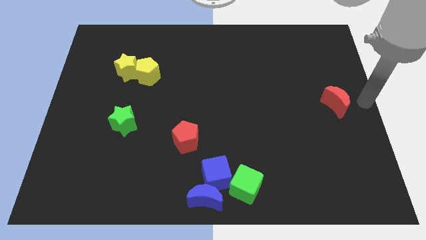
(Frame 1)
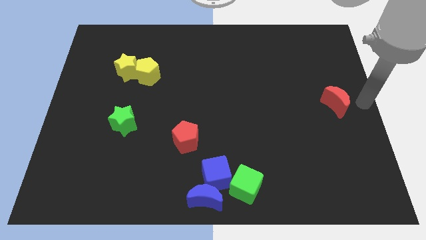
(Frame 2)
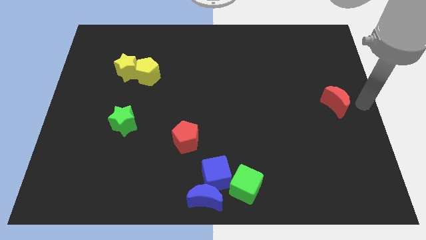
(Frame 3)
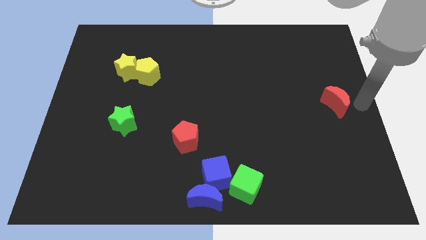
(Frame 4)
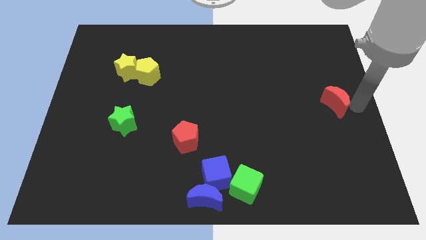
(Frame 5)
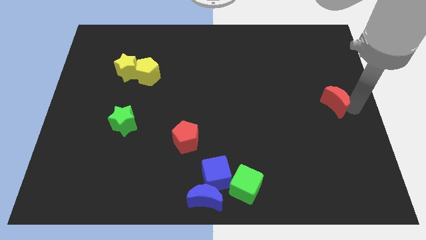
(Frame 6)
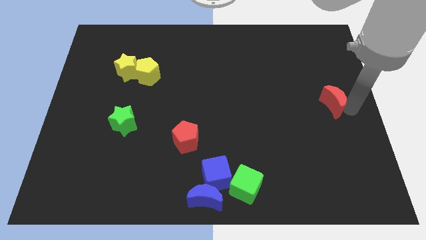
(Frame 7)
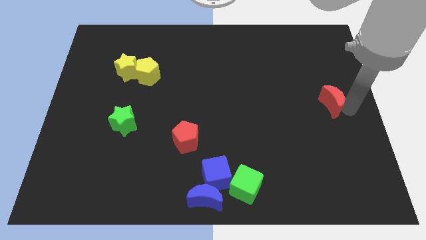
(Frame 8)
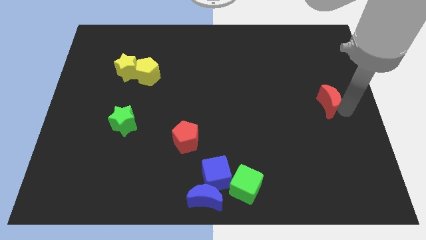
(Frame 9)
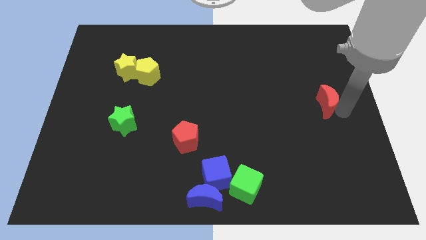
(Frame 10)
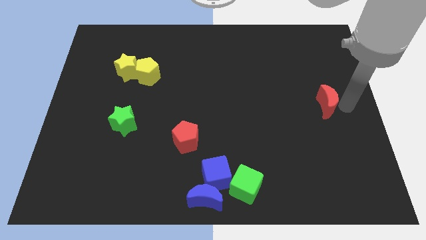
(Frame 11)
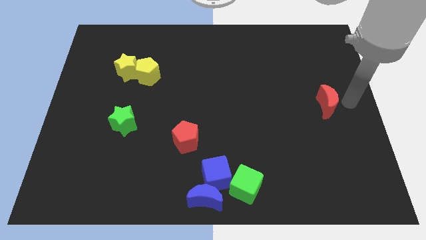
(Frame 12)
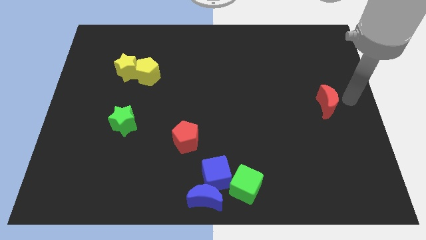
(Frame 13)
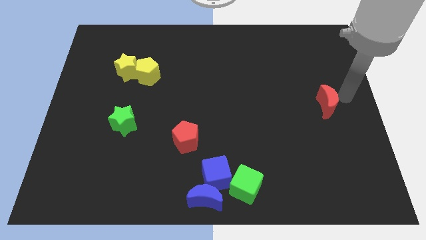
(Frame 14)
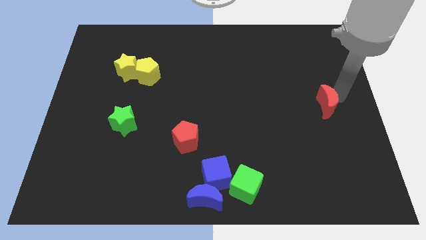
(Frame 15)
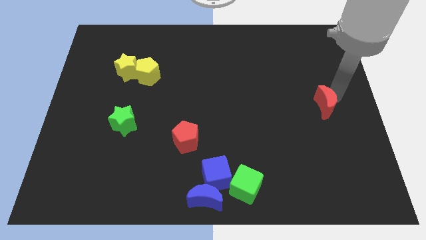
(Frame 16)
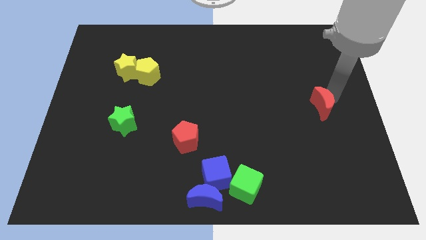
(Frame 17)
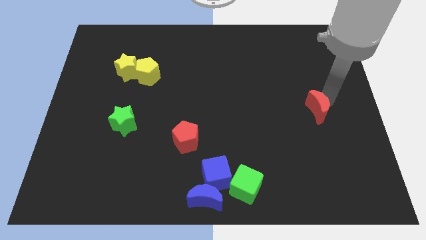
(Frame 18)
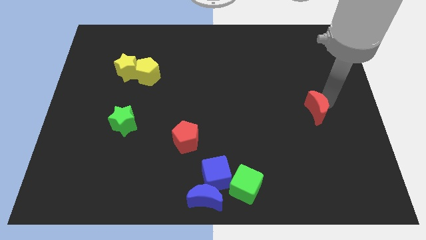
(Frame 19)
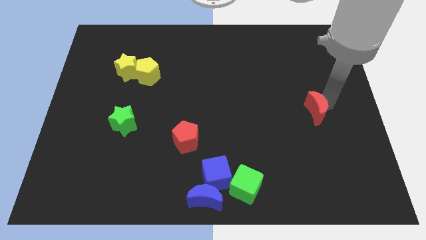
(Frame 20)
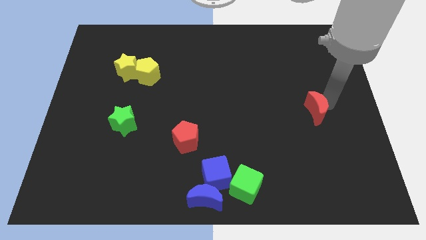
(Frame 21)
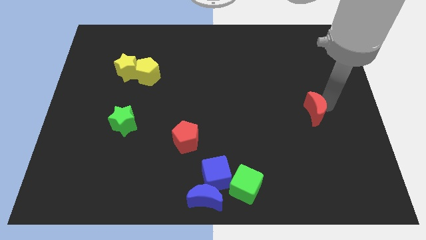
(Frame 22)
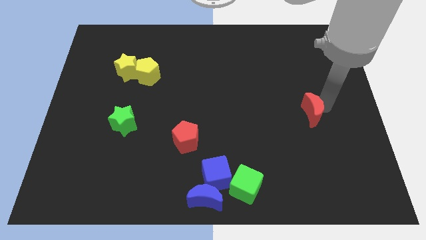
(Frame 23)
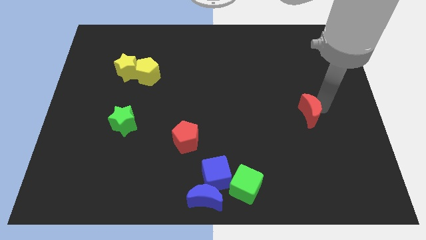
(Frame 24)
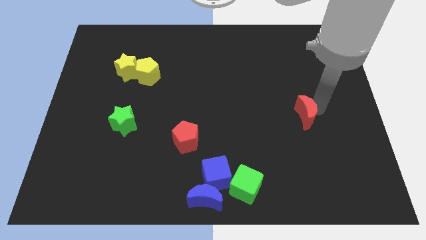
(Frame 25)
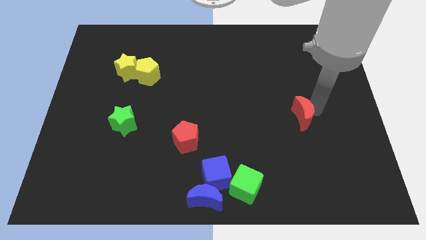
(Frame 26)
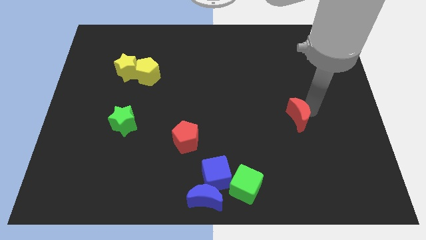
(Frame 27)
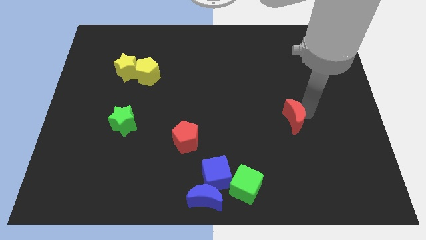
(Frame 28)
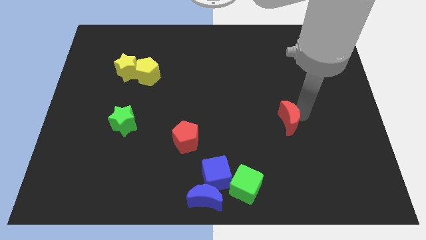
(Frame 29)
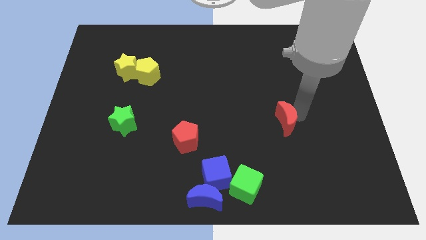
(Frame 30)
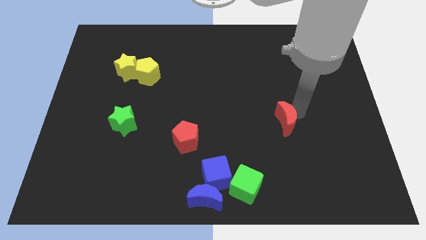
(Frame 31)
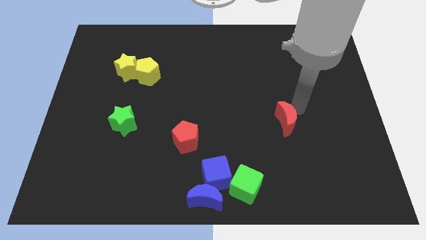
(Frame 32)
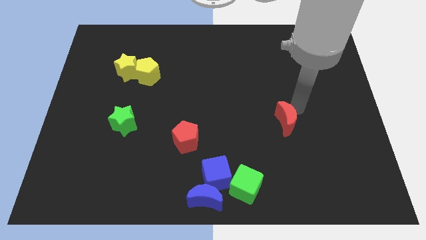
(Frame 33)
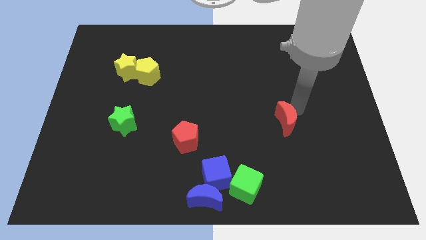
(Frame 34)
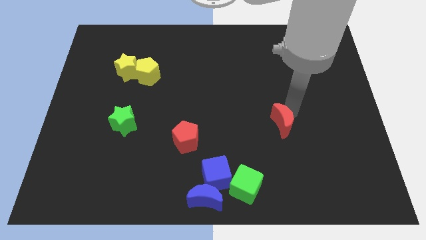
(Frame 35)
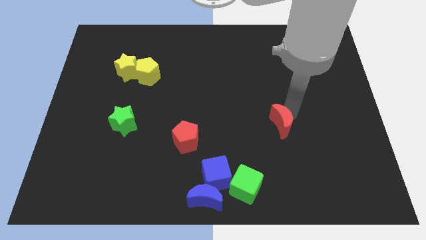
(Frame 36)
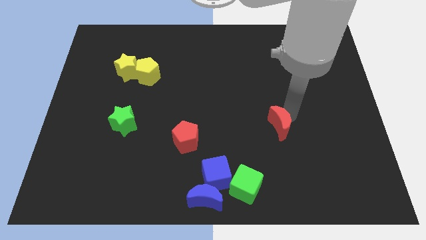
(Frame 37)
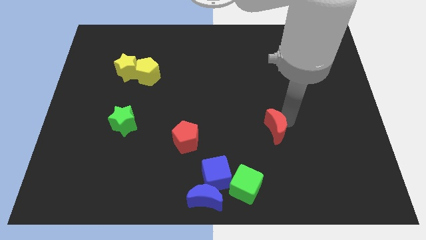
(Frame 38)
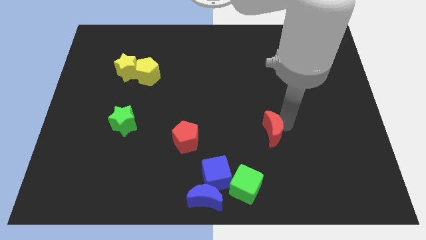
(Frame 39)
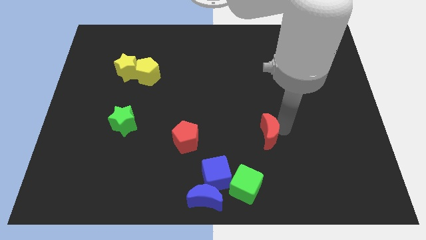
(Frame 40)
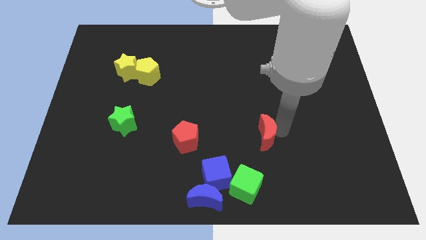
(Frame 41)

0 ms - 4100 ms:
move the red crescent parallel to the right of the red pentagon

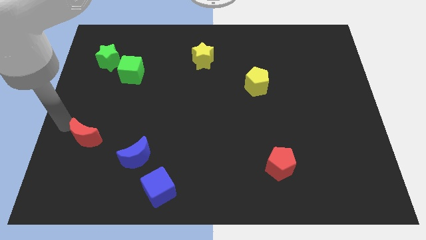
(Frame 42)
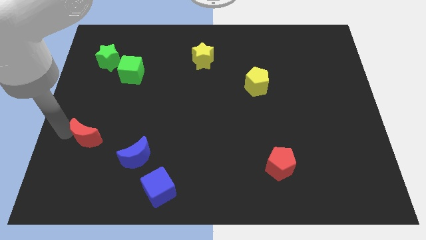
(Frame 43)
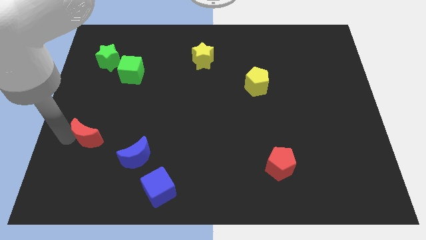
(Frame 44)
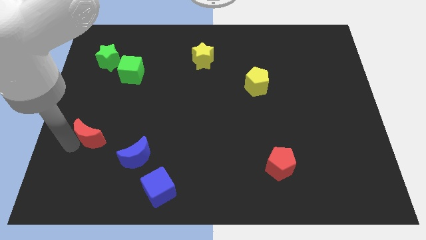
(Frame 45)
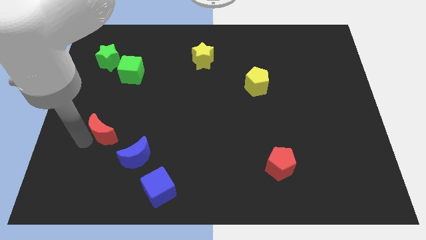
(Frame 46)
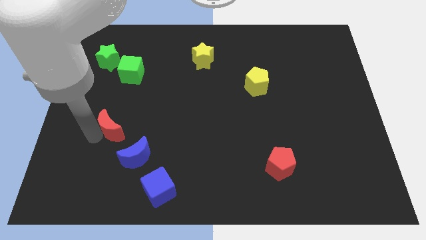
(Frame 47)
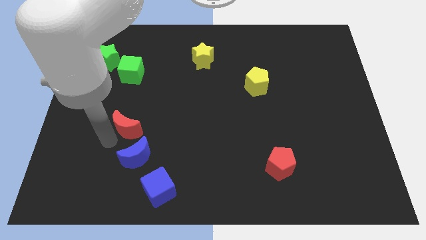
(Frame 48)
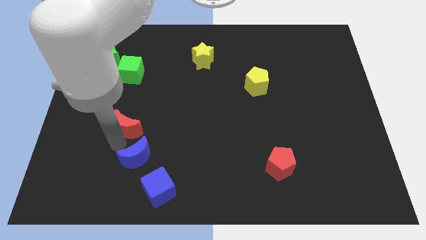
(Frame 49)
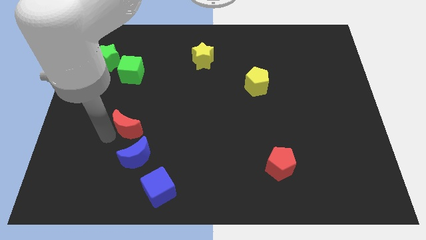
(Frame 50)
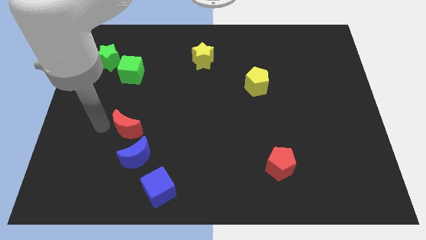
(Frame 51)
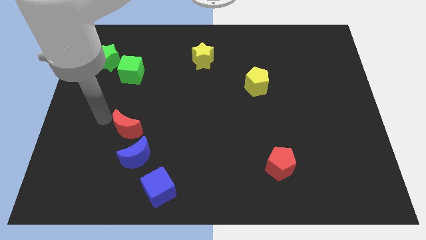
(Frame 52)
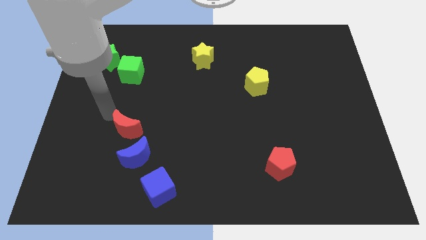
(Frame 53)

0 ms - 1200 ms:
push the red crescent to the top of the blue crescent

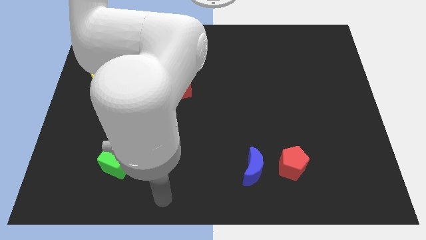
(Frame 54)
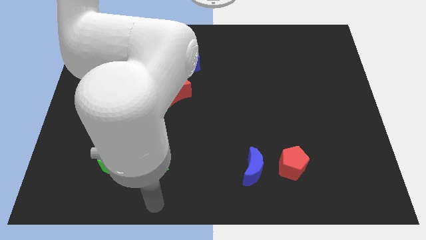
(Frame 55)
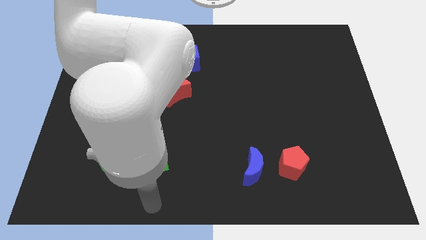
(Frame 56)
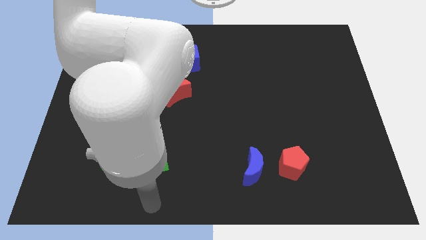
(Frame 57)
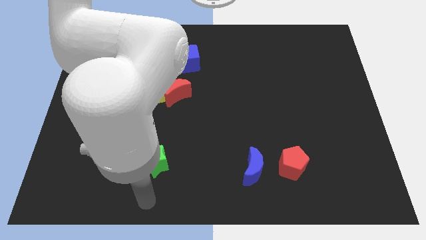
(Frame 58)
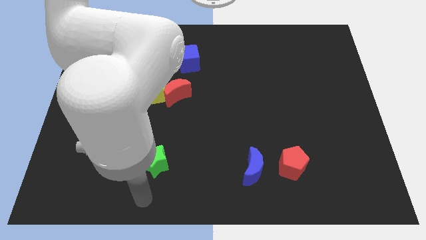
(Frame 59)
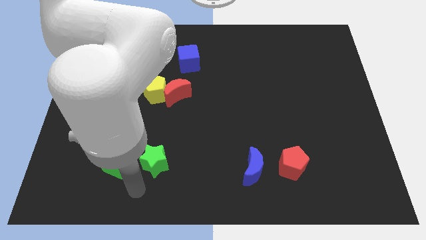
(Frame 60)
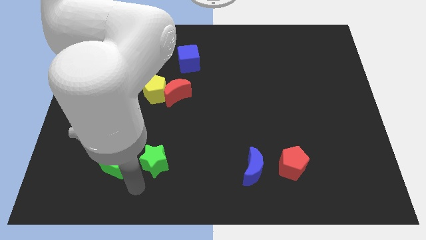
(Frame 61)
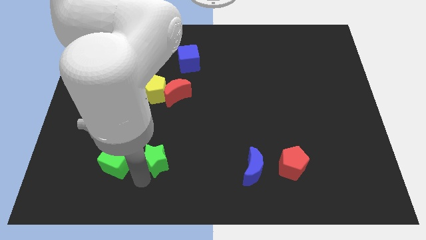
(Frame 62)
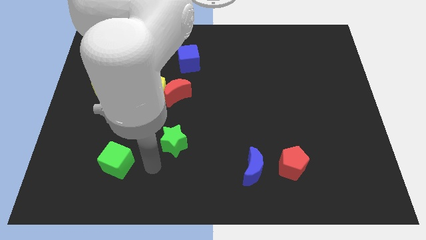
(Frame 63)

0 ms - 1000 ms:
drag the green star slightly upwards

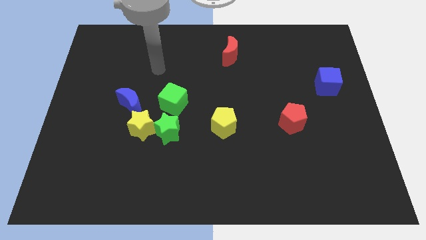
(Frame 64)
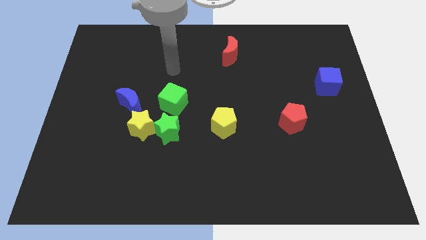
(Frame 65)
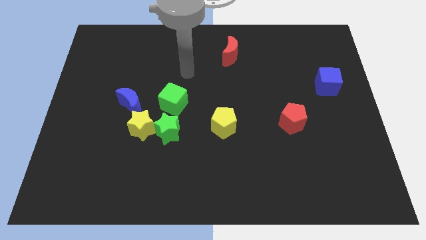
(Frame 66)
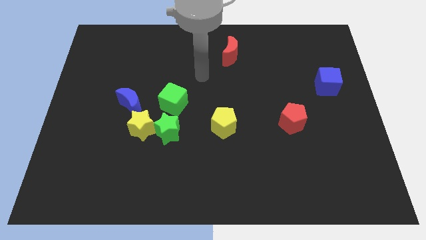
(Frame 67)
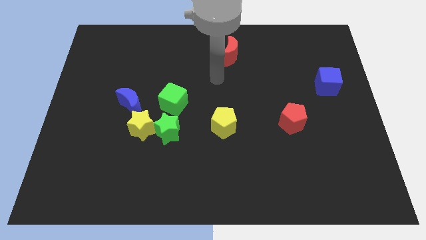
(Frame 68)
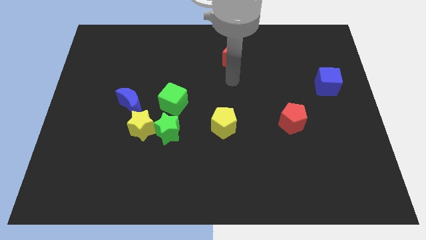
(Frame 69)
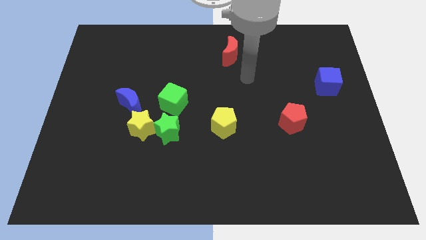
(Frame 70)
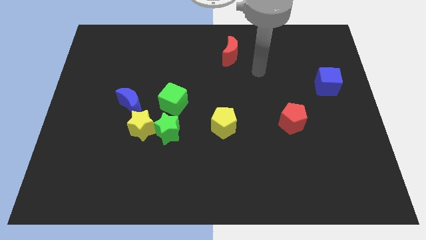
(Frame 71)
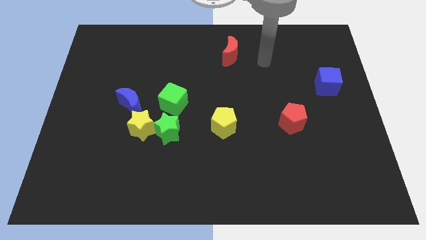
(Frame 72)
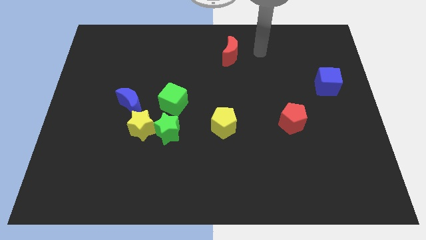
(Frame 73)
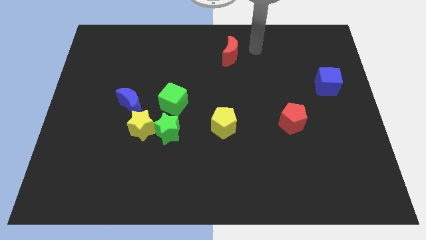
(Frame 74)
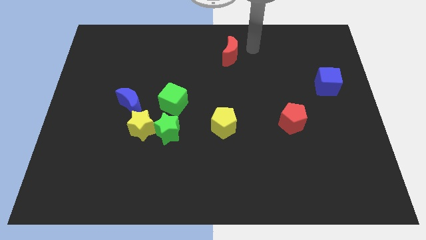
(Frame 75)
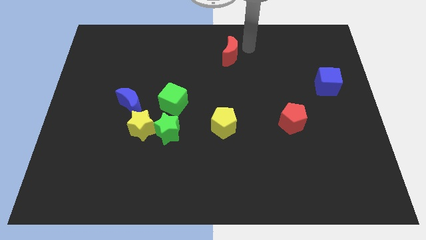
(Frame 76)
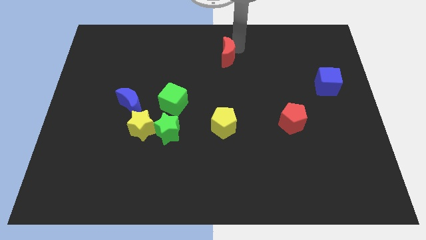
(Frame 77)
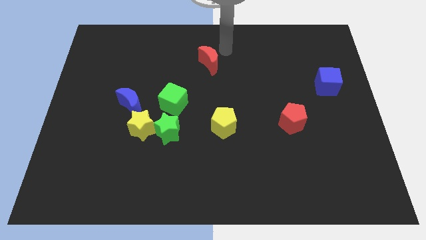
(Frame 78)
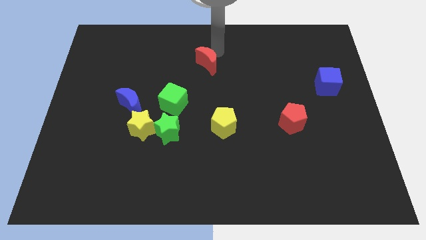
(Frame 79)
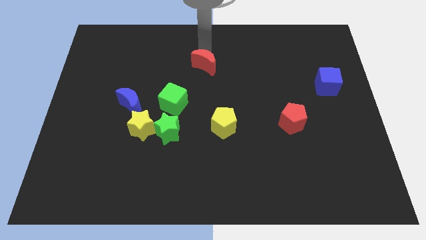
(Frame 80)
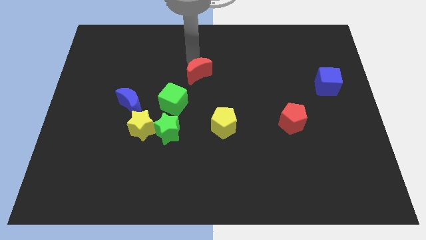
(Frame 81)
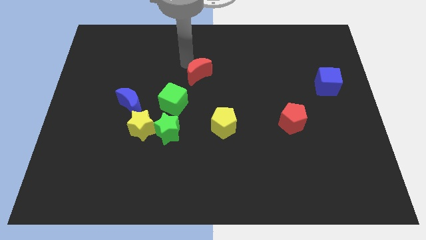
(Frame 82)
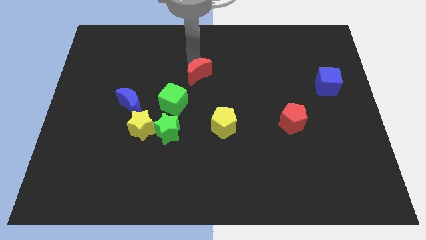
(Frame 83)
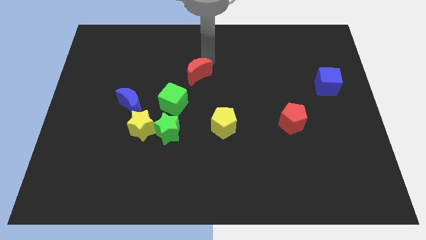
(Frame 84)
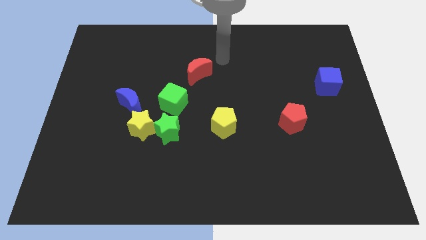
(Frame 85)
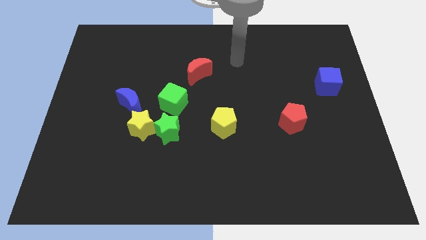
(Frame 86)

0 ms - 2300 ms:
push the red moon diagonally top right to the green cube

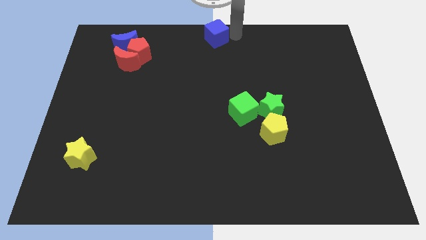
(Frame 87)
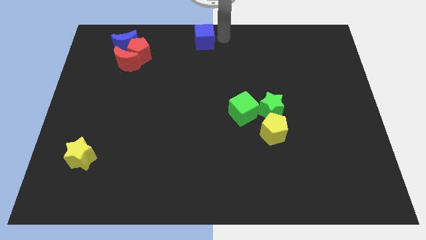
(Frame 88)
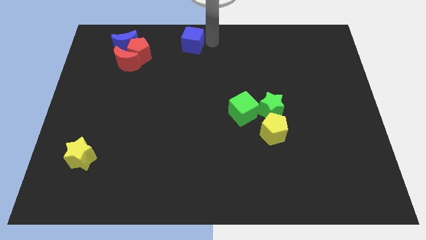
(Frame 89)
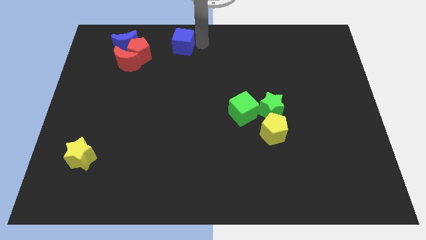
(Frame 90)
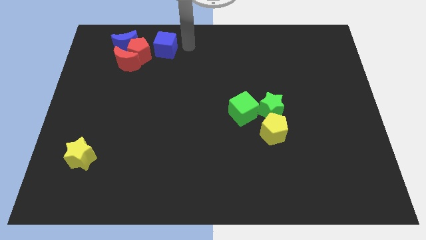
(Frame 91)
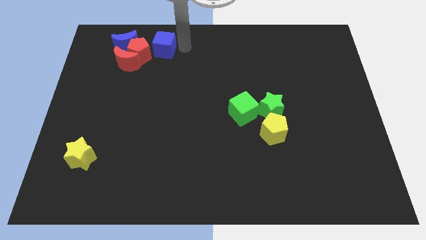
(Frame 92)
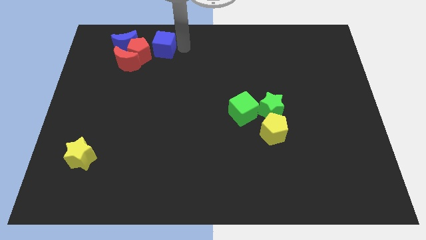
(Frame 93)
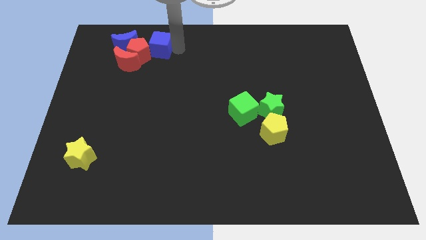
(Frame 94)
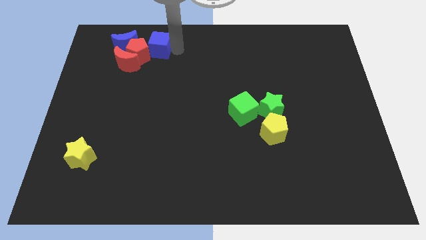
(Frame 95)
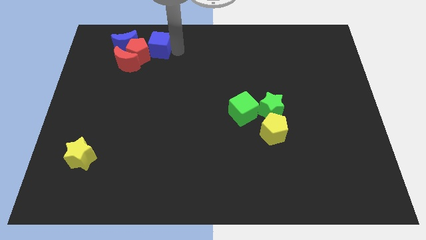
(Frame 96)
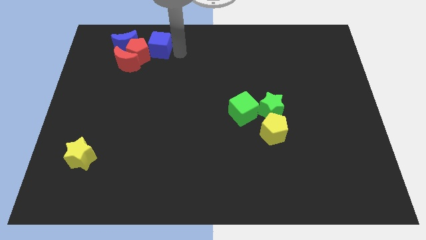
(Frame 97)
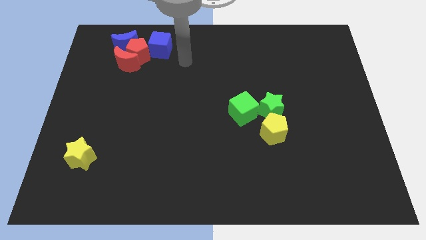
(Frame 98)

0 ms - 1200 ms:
push the blue cube towards the red pentagon
